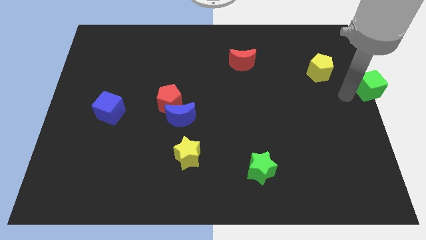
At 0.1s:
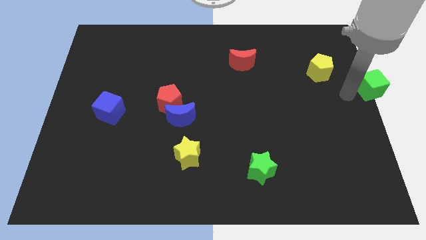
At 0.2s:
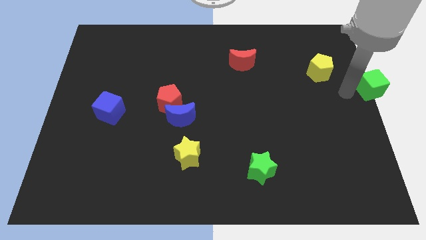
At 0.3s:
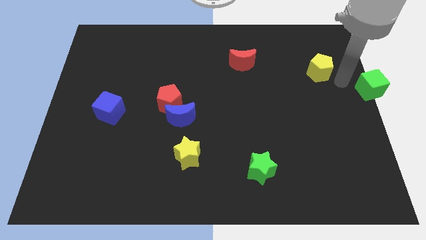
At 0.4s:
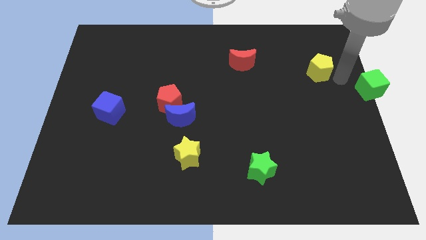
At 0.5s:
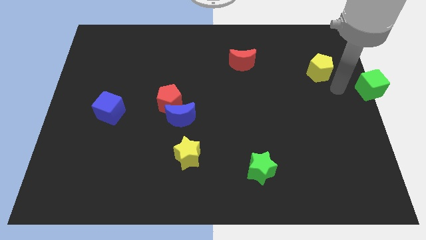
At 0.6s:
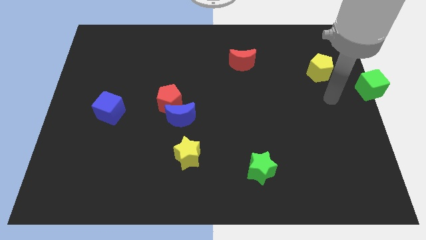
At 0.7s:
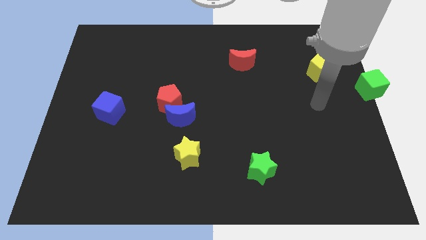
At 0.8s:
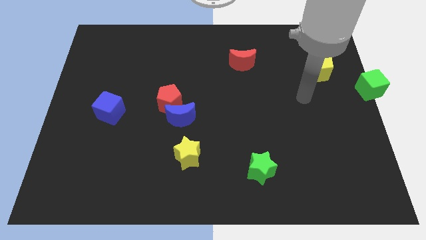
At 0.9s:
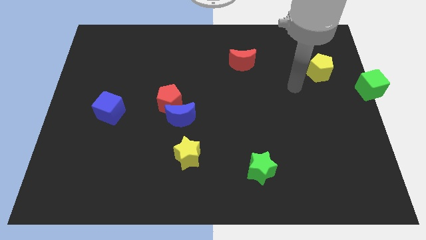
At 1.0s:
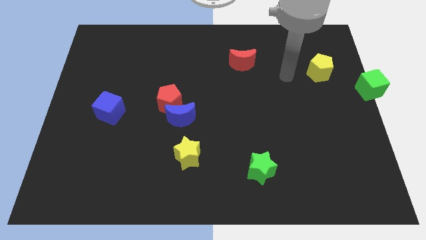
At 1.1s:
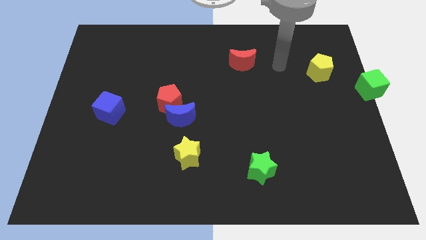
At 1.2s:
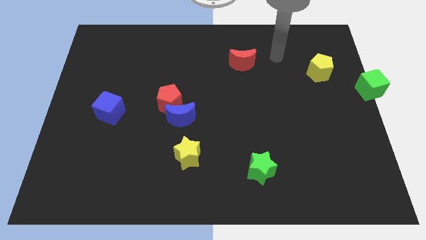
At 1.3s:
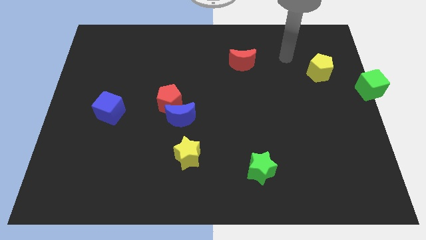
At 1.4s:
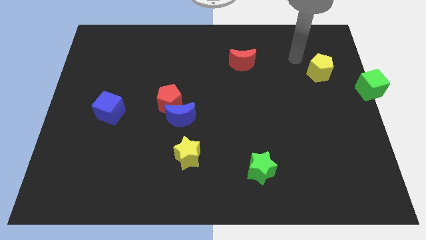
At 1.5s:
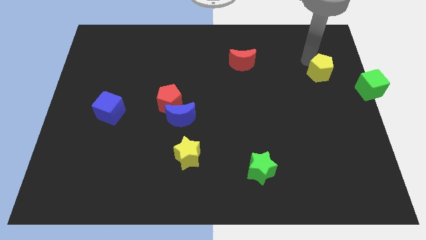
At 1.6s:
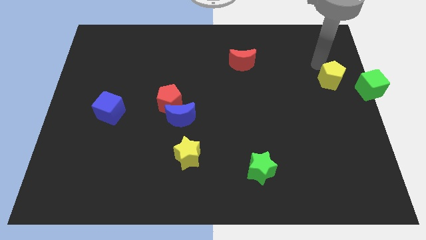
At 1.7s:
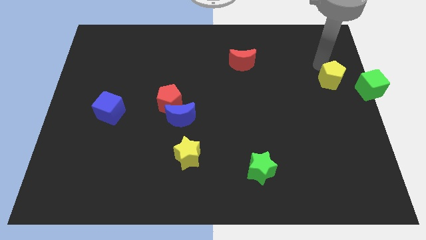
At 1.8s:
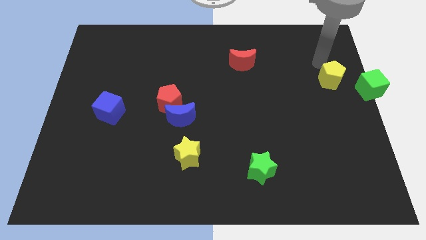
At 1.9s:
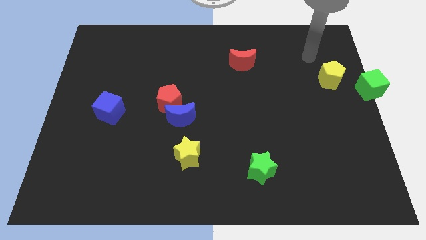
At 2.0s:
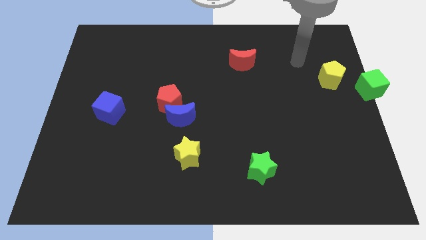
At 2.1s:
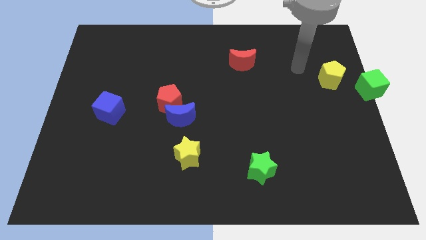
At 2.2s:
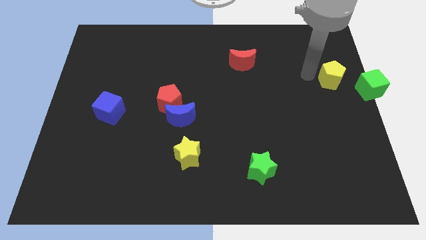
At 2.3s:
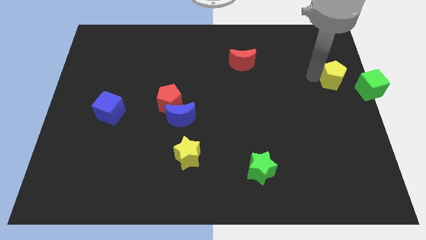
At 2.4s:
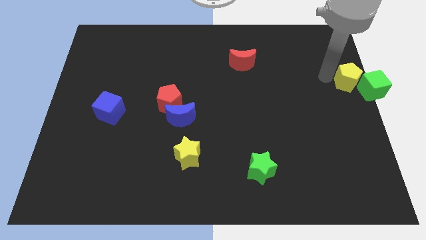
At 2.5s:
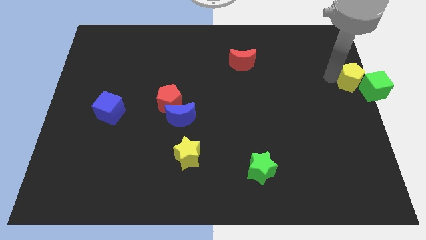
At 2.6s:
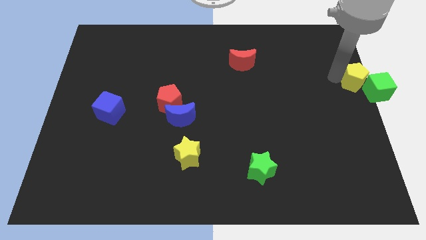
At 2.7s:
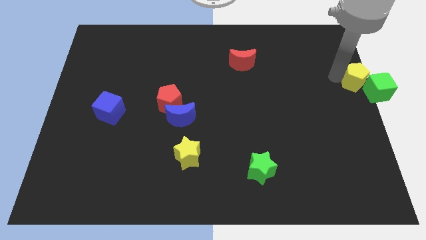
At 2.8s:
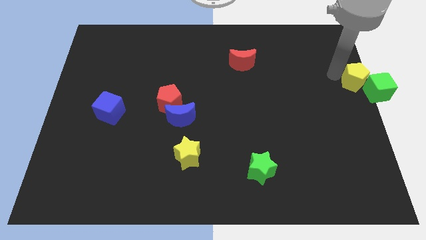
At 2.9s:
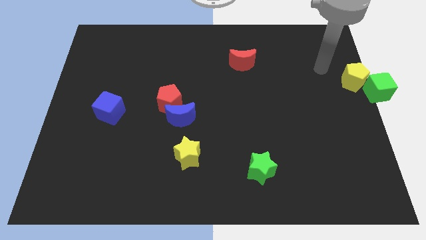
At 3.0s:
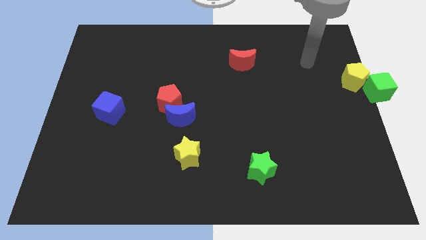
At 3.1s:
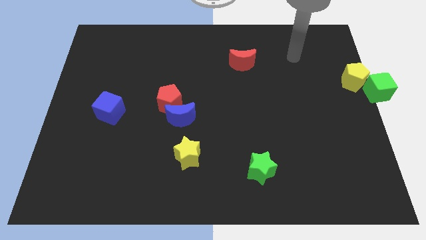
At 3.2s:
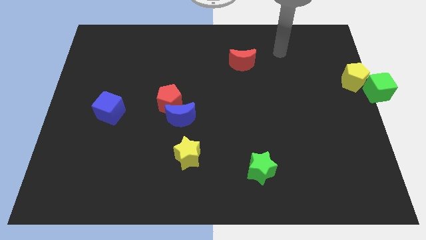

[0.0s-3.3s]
move the yellow pentagon into the green cube

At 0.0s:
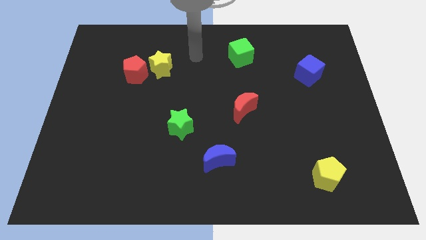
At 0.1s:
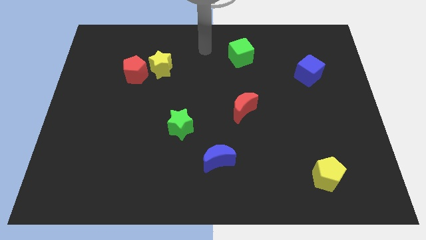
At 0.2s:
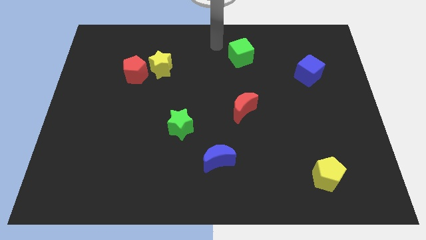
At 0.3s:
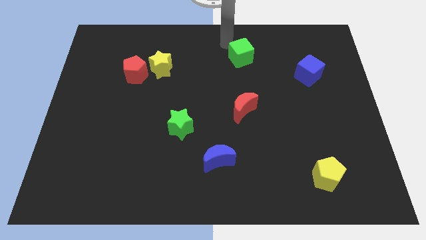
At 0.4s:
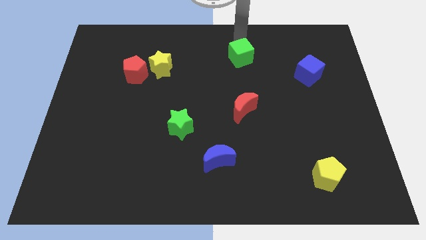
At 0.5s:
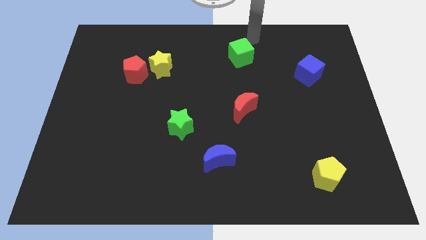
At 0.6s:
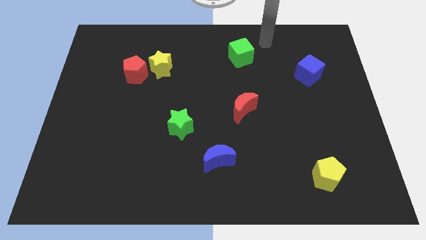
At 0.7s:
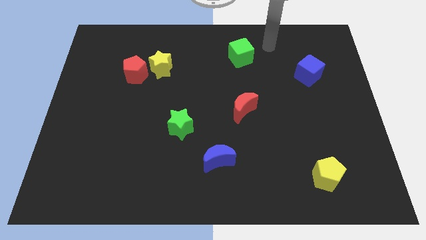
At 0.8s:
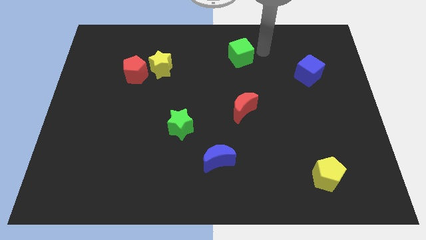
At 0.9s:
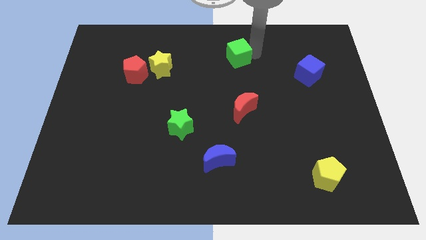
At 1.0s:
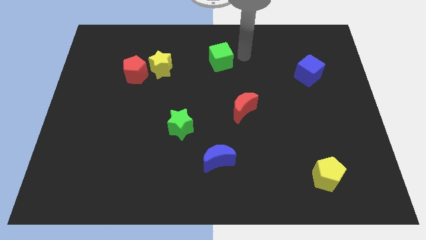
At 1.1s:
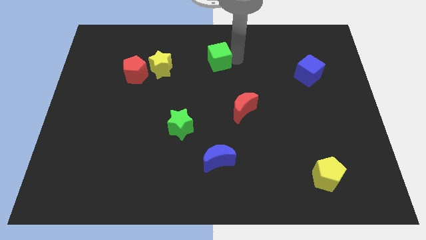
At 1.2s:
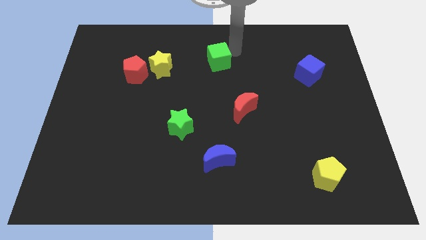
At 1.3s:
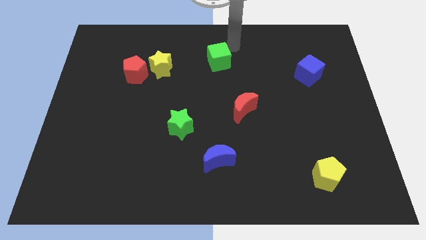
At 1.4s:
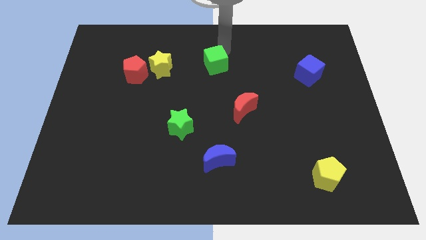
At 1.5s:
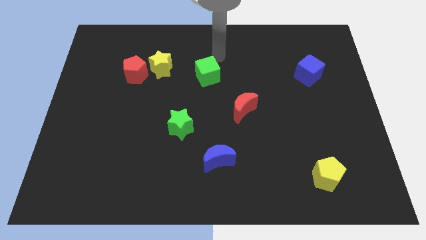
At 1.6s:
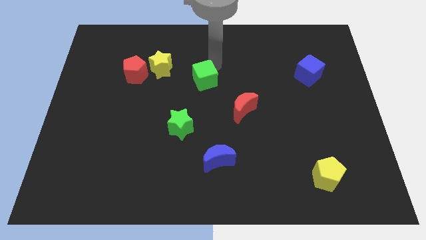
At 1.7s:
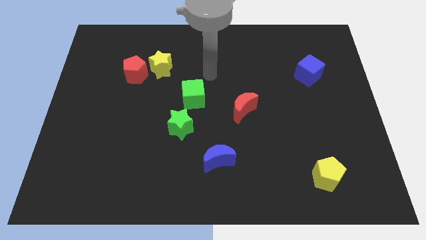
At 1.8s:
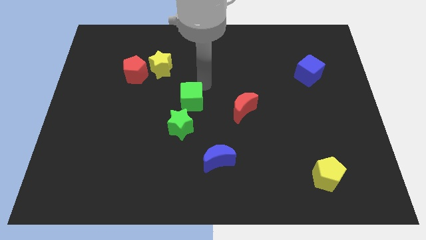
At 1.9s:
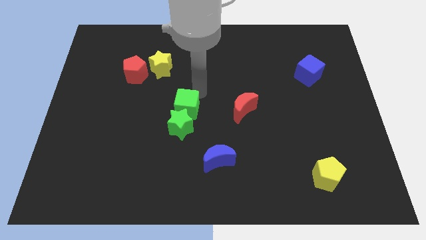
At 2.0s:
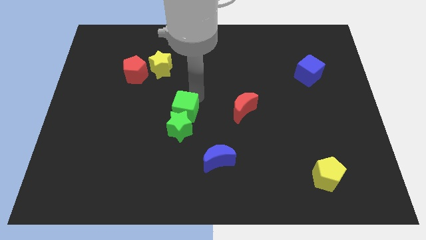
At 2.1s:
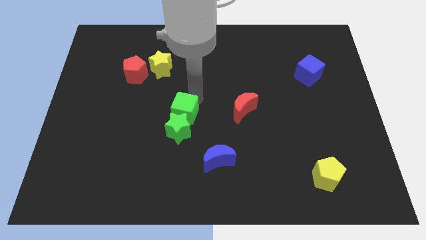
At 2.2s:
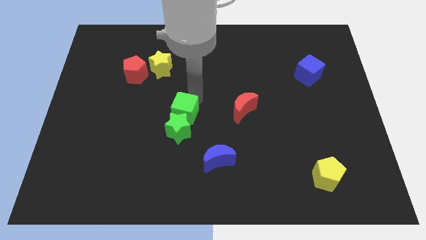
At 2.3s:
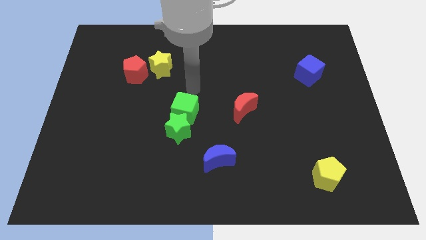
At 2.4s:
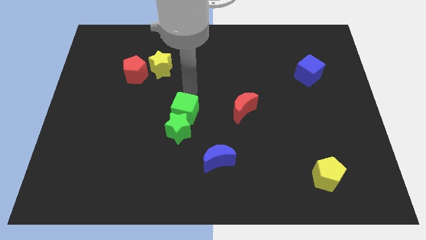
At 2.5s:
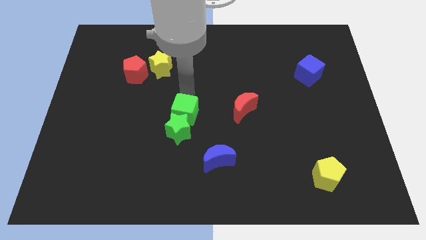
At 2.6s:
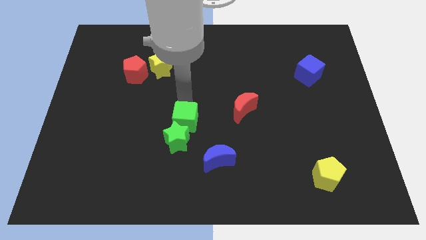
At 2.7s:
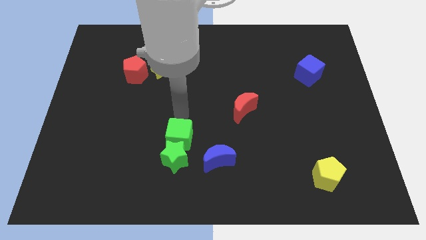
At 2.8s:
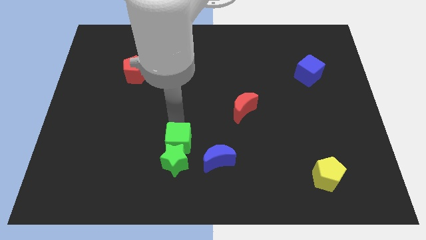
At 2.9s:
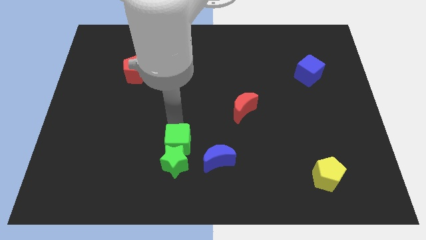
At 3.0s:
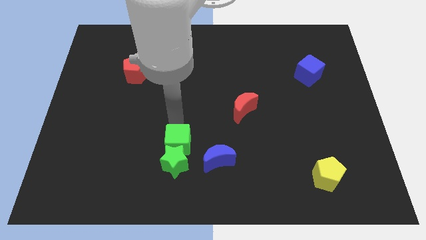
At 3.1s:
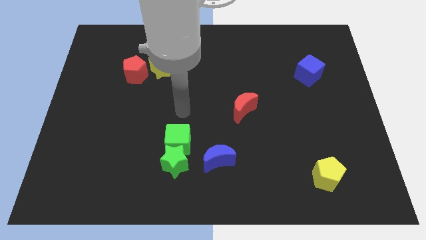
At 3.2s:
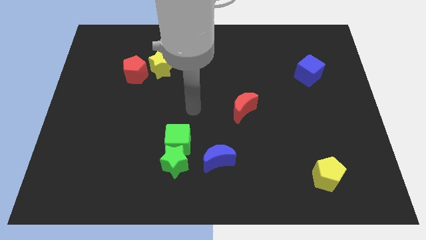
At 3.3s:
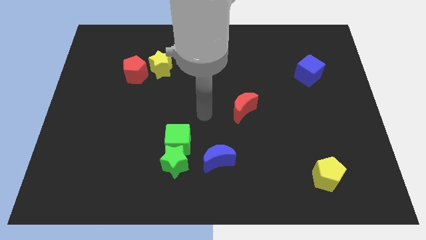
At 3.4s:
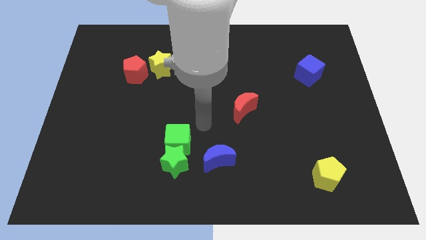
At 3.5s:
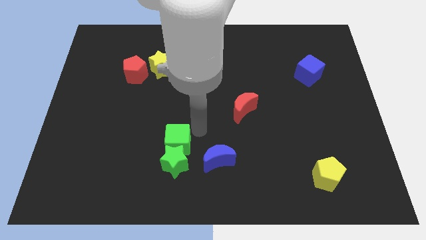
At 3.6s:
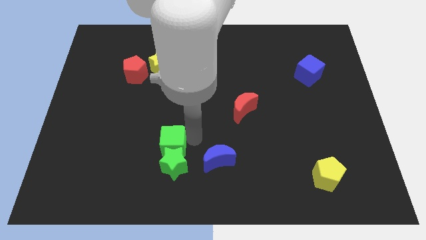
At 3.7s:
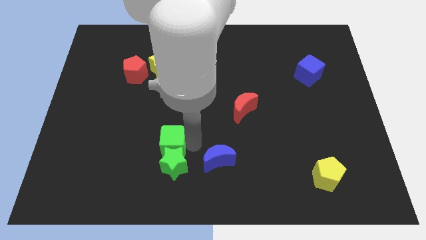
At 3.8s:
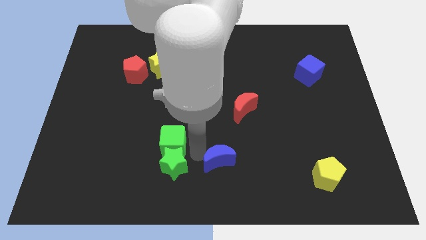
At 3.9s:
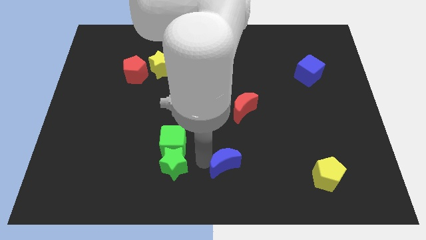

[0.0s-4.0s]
move the green cube into the green star

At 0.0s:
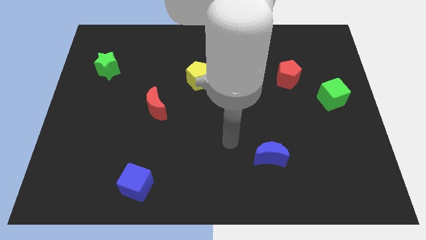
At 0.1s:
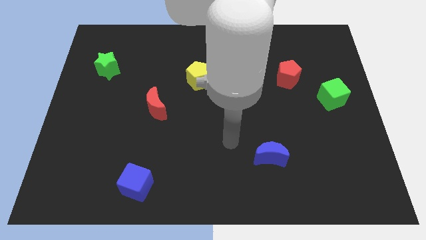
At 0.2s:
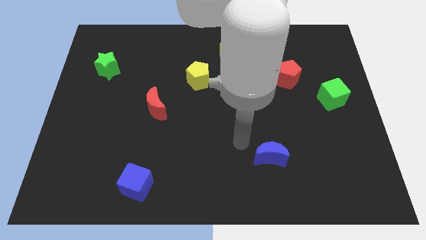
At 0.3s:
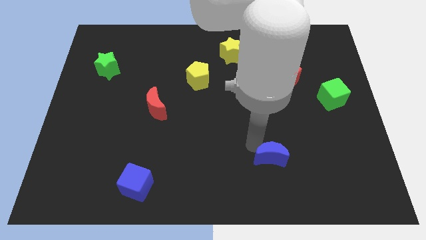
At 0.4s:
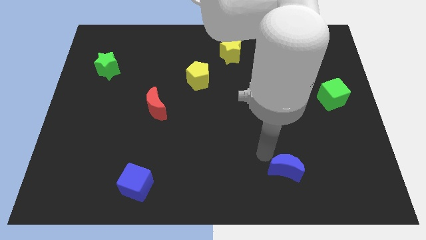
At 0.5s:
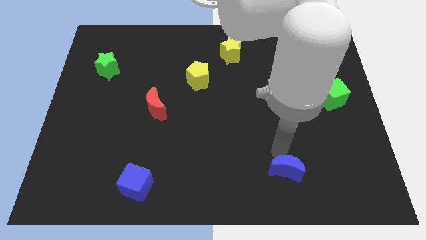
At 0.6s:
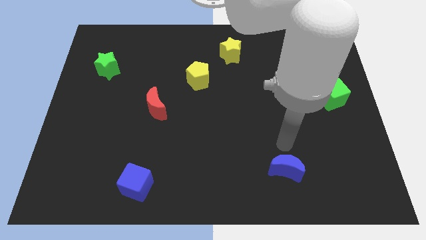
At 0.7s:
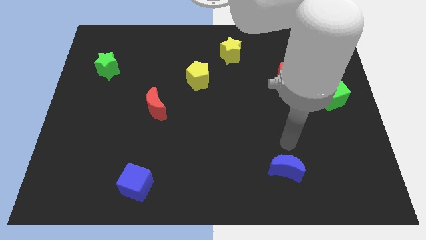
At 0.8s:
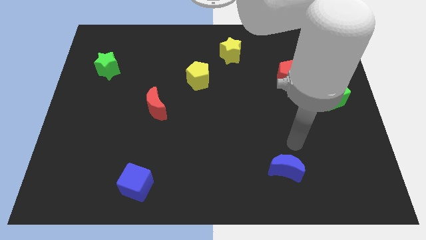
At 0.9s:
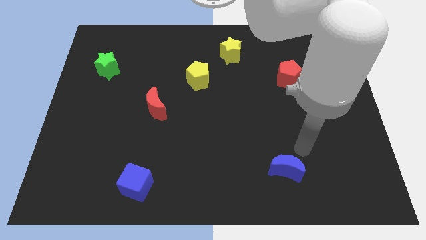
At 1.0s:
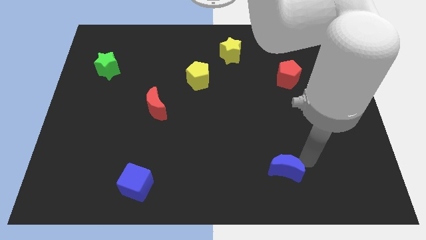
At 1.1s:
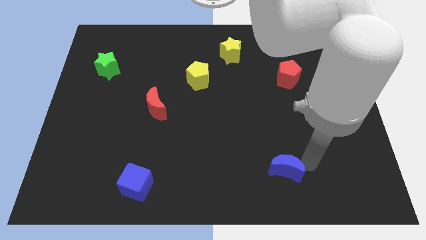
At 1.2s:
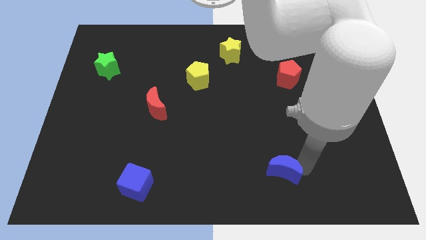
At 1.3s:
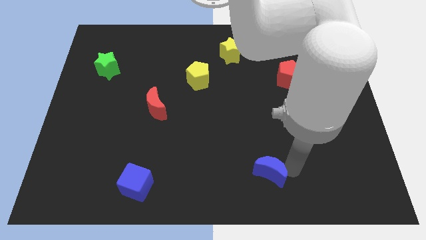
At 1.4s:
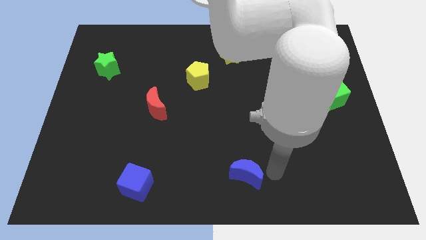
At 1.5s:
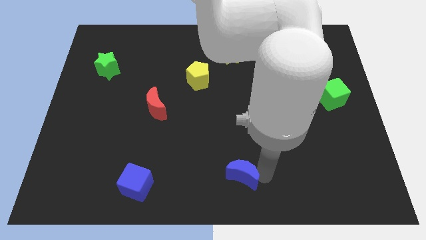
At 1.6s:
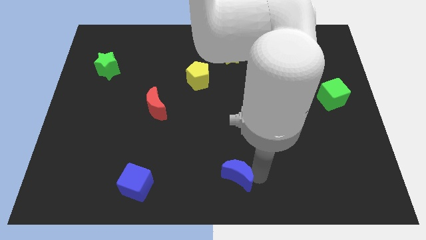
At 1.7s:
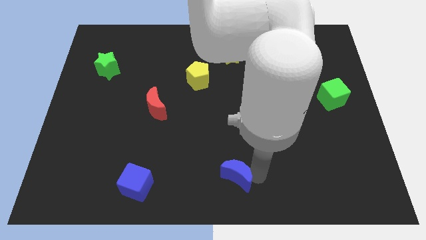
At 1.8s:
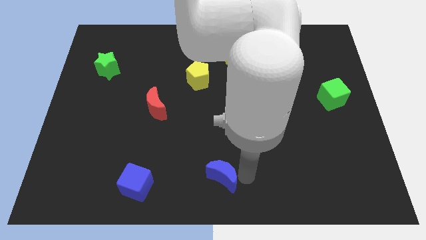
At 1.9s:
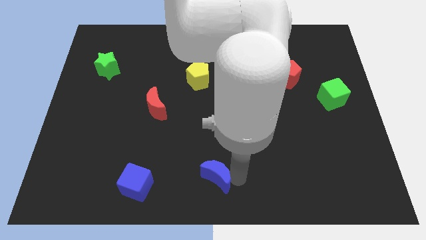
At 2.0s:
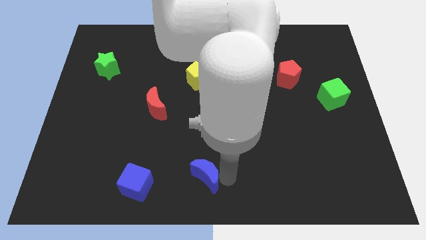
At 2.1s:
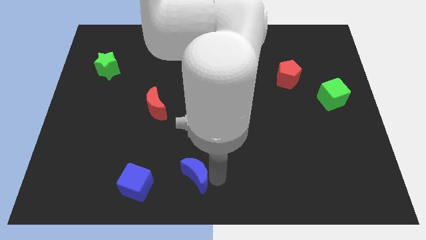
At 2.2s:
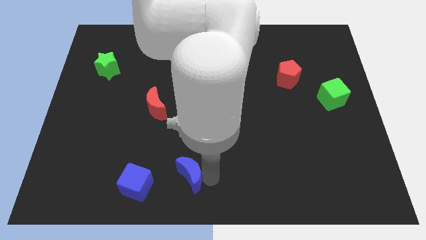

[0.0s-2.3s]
push the blue crescent to the right of the blue cube
